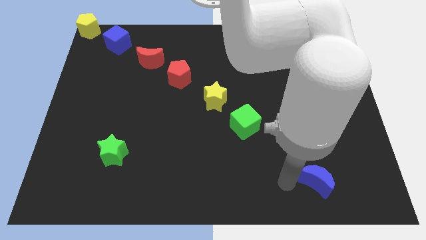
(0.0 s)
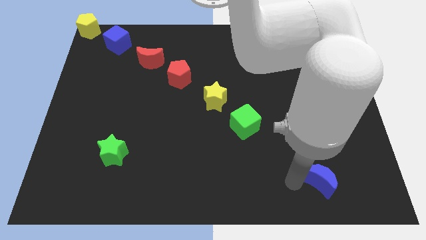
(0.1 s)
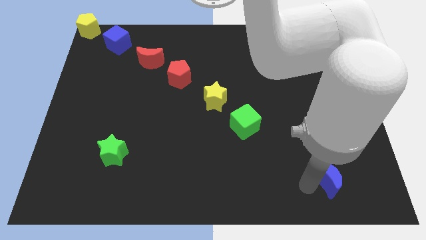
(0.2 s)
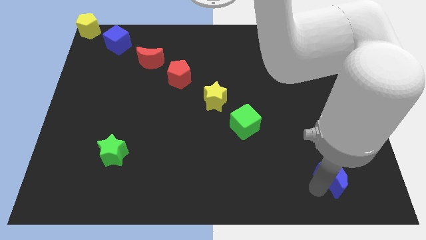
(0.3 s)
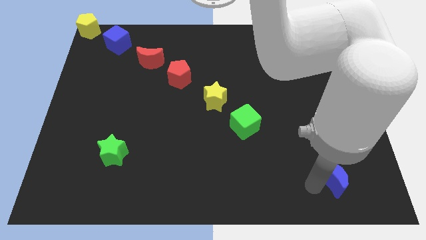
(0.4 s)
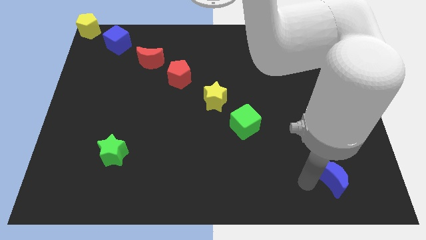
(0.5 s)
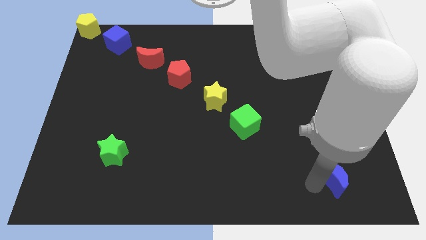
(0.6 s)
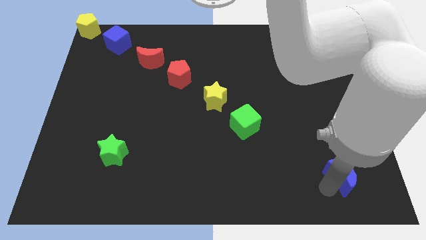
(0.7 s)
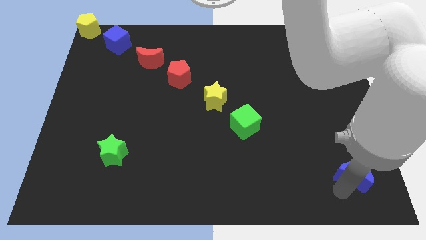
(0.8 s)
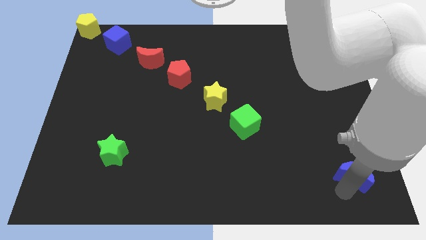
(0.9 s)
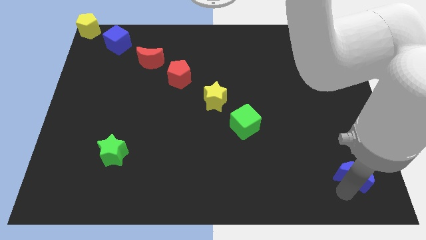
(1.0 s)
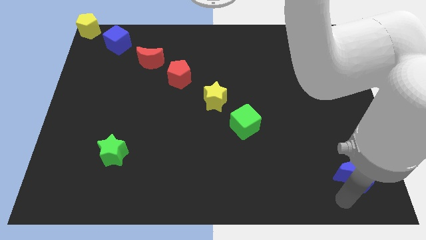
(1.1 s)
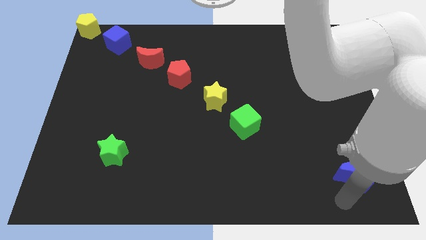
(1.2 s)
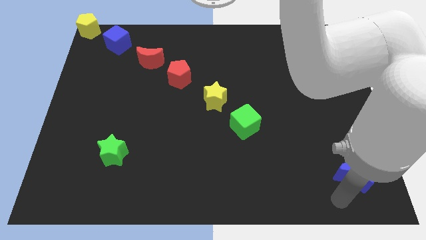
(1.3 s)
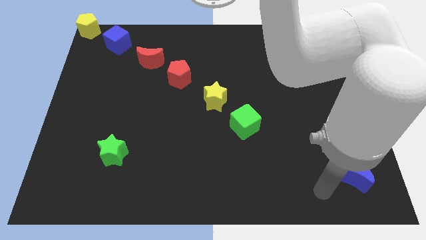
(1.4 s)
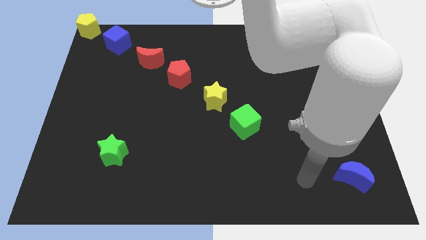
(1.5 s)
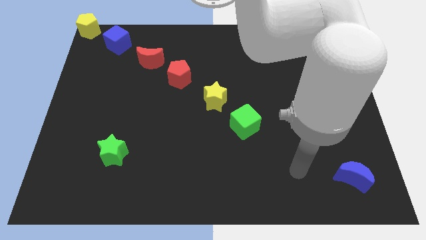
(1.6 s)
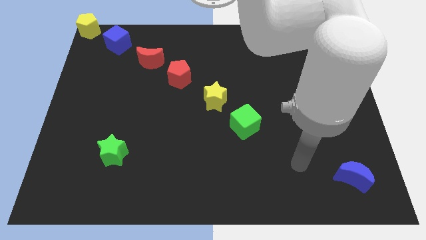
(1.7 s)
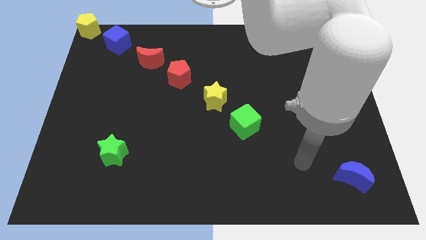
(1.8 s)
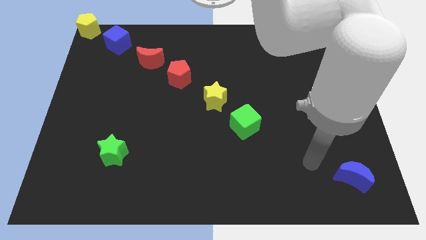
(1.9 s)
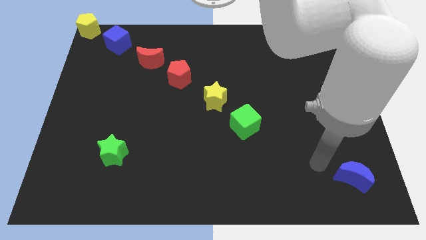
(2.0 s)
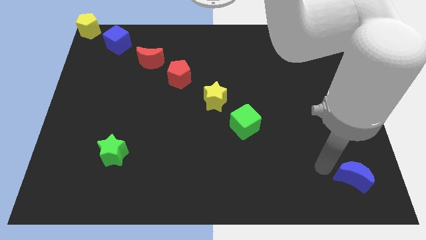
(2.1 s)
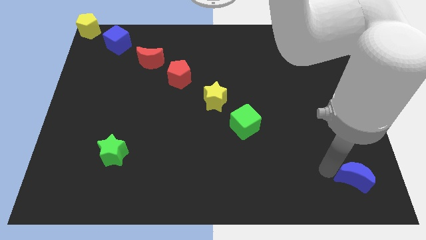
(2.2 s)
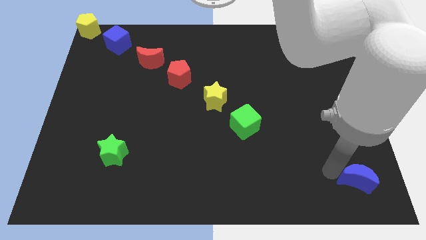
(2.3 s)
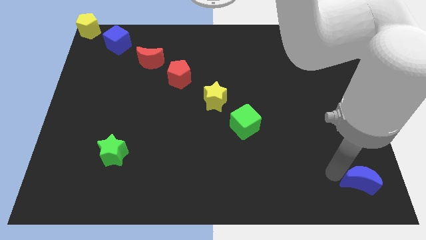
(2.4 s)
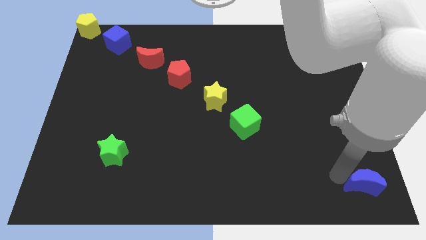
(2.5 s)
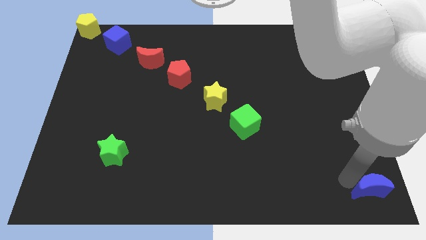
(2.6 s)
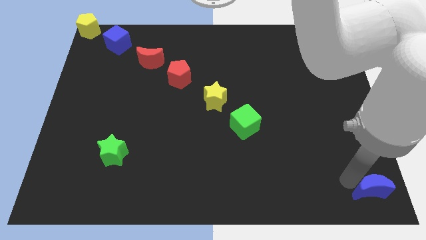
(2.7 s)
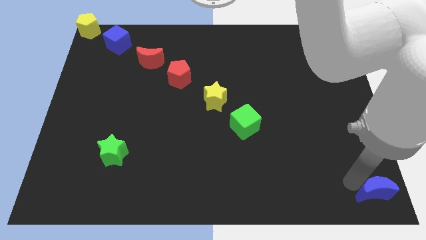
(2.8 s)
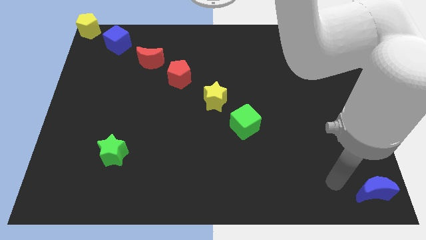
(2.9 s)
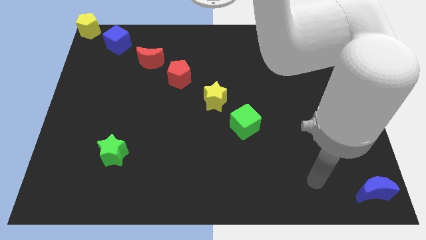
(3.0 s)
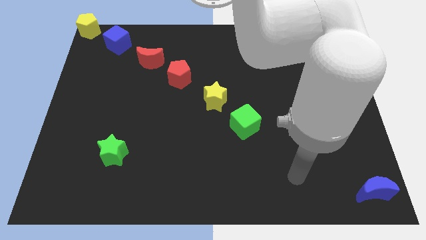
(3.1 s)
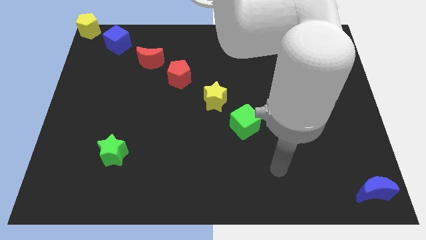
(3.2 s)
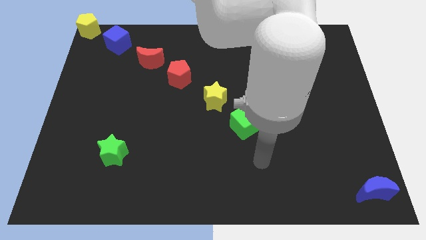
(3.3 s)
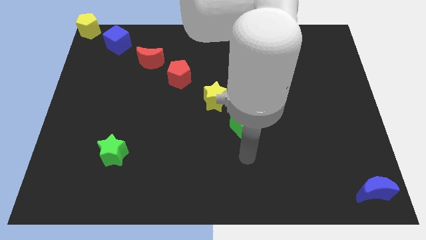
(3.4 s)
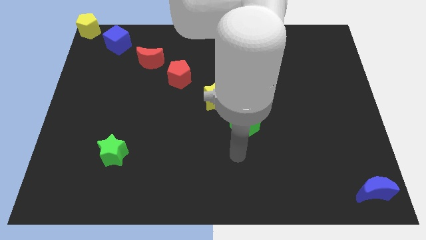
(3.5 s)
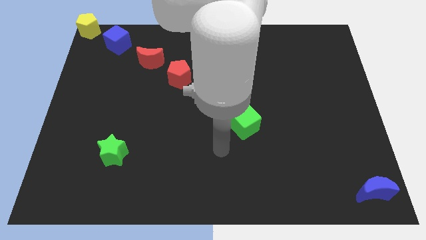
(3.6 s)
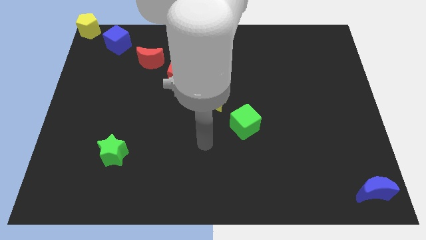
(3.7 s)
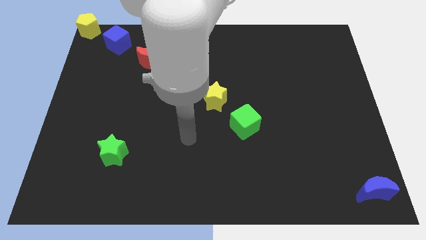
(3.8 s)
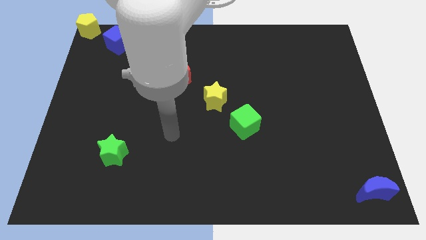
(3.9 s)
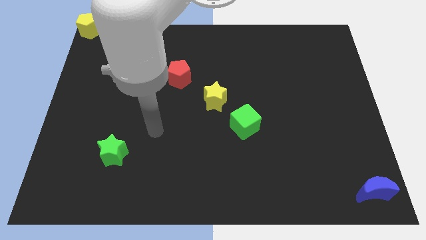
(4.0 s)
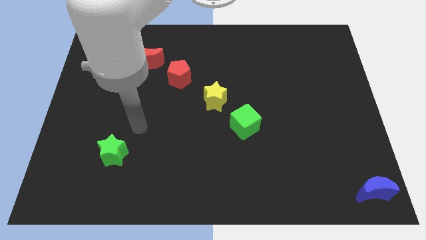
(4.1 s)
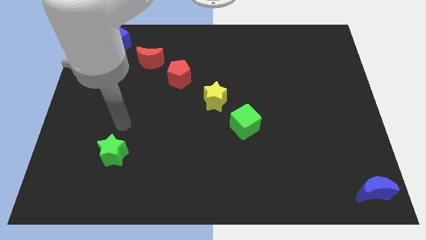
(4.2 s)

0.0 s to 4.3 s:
move the blue crescent to the bottom right

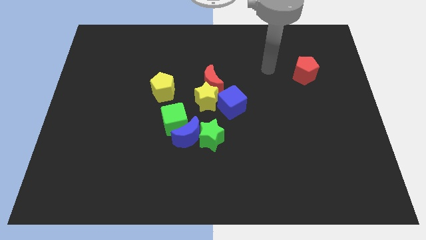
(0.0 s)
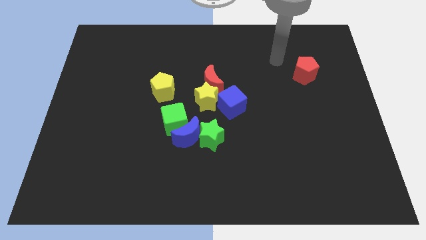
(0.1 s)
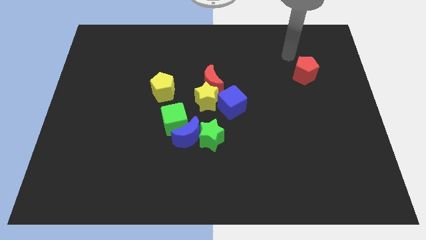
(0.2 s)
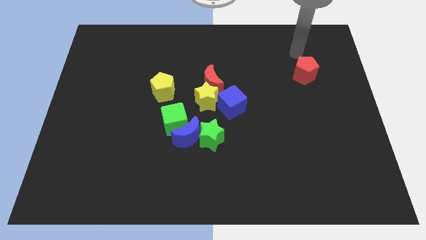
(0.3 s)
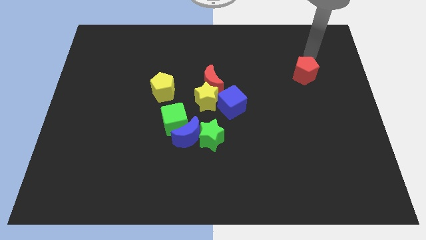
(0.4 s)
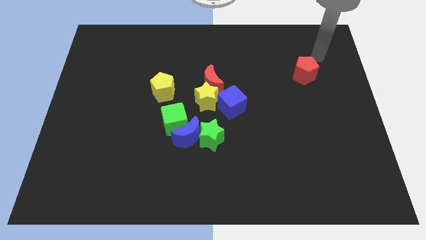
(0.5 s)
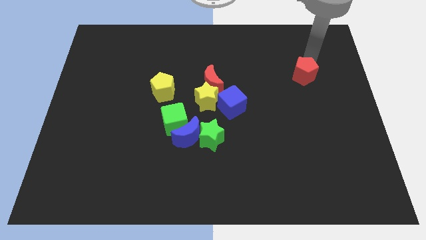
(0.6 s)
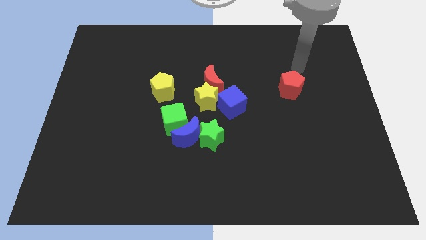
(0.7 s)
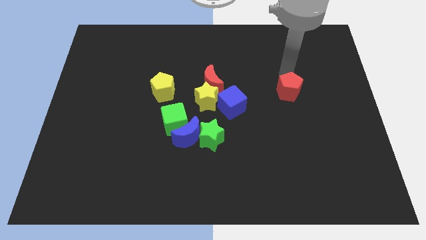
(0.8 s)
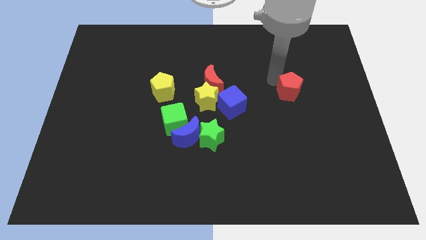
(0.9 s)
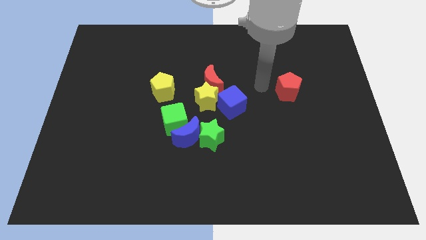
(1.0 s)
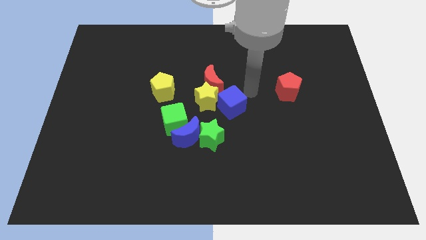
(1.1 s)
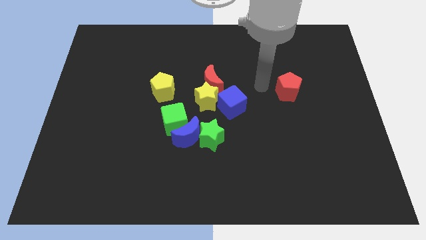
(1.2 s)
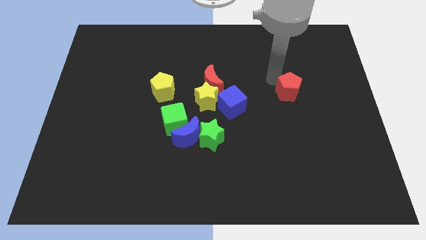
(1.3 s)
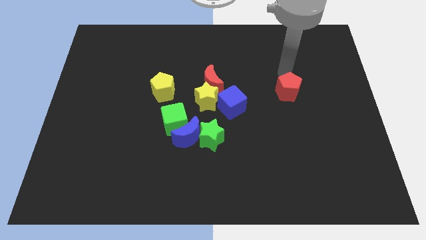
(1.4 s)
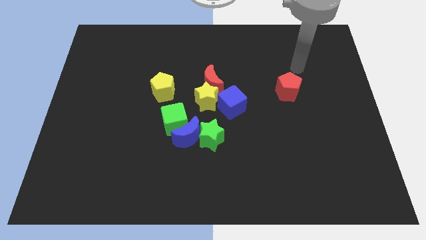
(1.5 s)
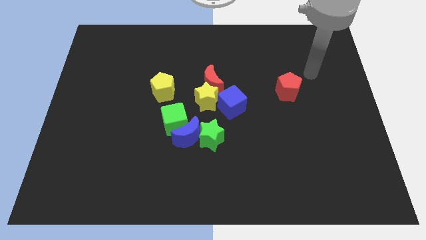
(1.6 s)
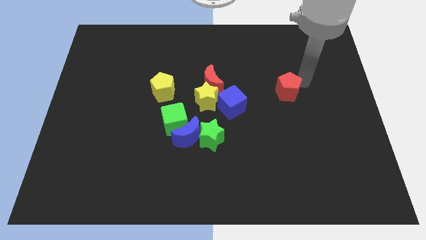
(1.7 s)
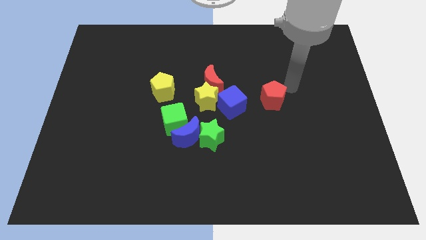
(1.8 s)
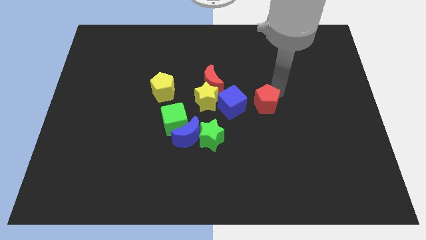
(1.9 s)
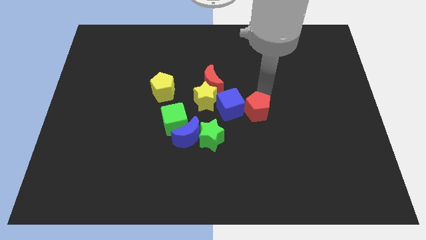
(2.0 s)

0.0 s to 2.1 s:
move the red pentagon to the right of blue cube

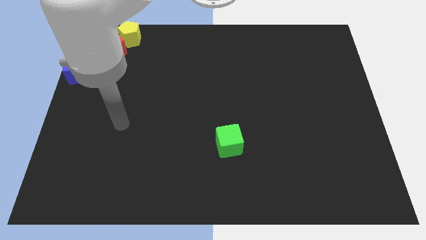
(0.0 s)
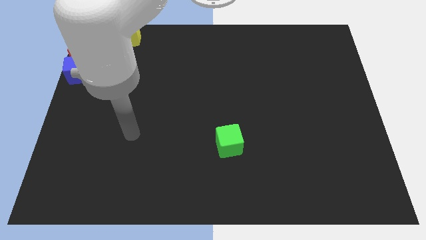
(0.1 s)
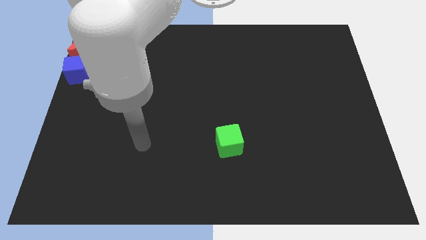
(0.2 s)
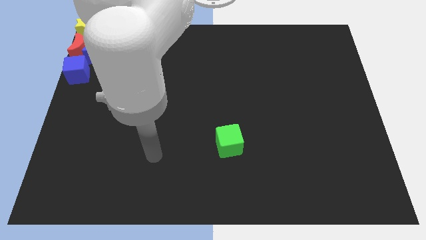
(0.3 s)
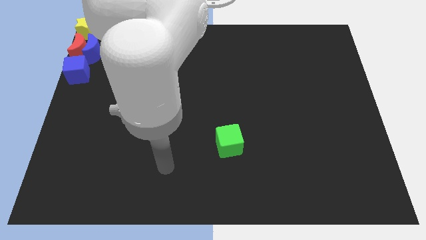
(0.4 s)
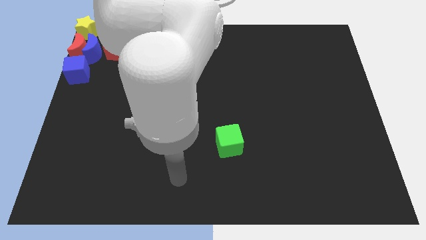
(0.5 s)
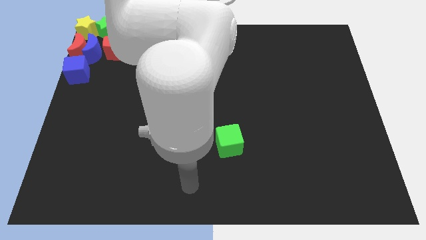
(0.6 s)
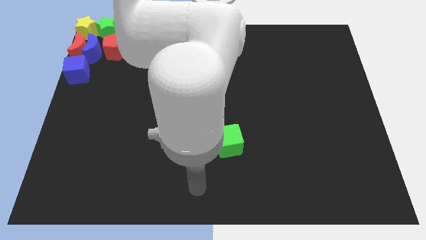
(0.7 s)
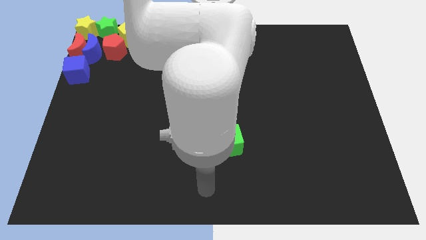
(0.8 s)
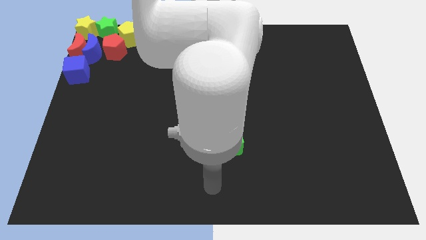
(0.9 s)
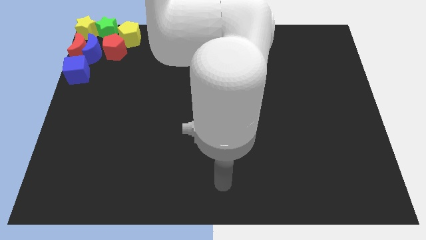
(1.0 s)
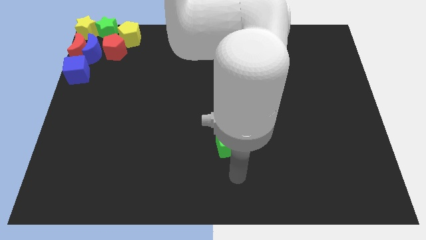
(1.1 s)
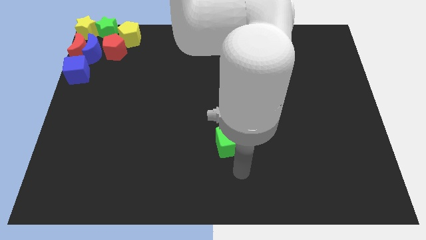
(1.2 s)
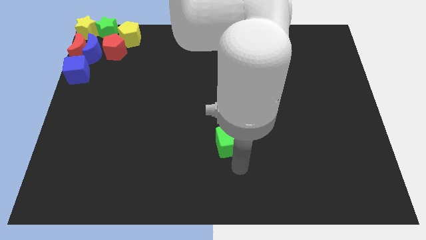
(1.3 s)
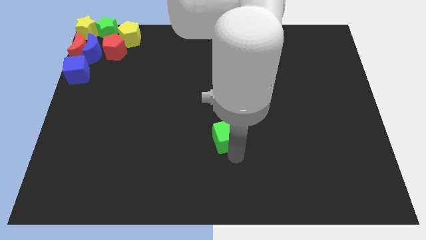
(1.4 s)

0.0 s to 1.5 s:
place the arm down to the green cube

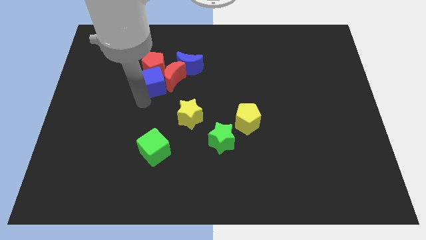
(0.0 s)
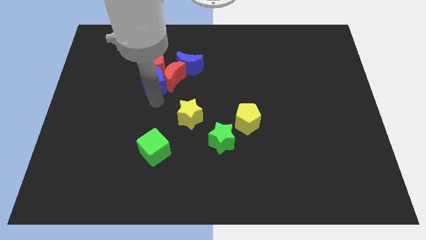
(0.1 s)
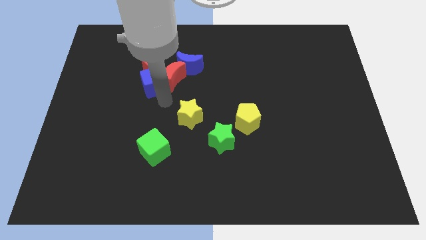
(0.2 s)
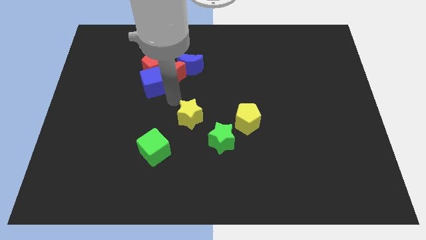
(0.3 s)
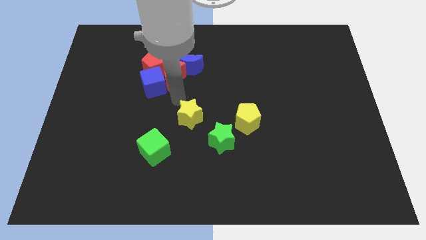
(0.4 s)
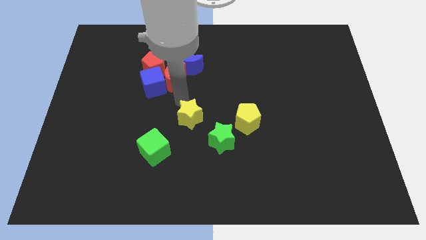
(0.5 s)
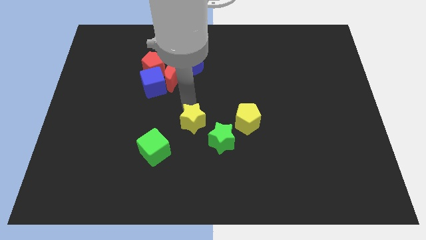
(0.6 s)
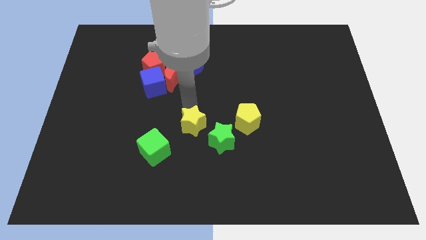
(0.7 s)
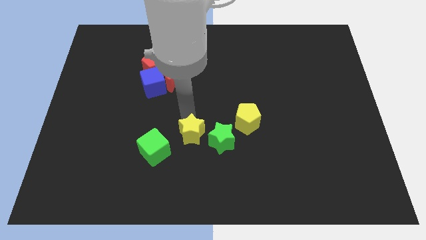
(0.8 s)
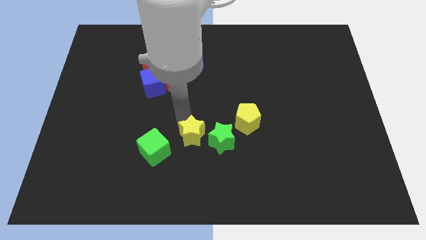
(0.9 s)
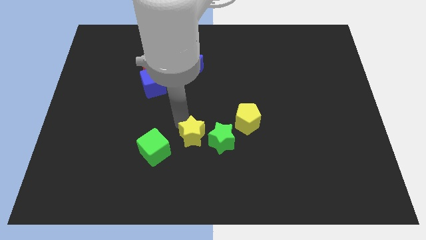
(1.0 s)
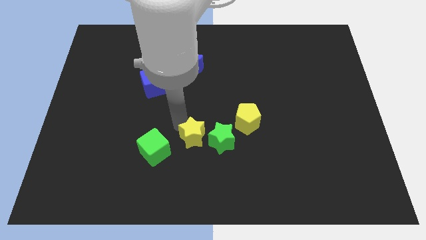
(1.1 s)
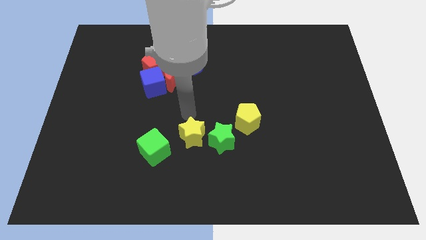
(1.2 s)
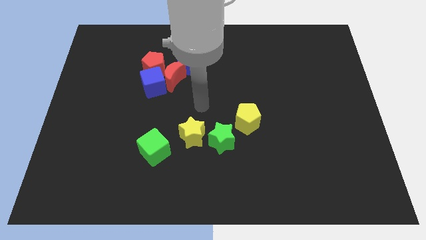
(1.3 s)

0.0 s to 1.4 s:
place the yellow star diagonally to the left side of the green star
